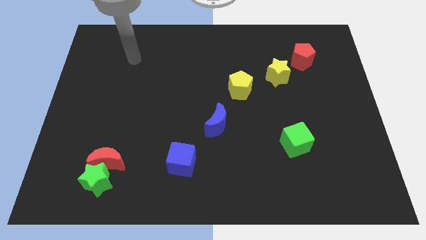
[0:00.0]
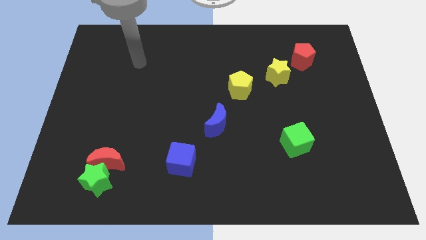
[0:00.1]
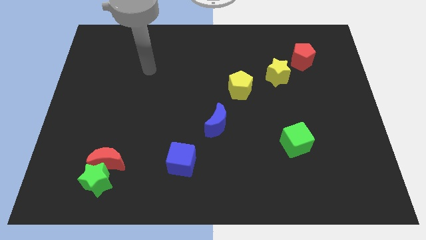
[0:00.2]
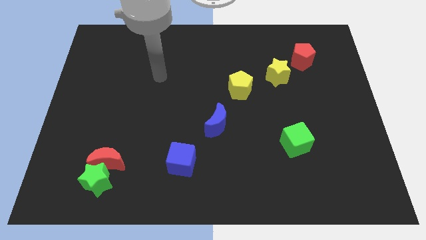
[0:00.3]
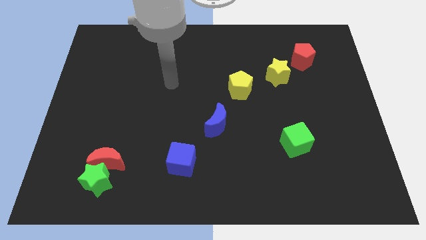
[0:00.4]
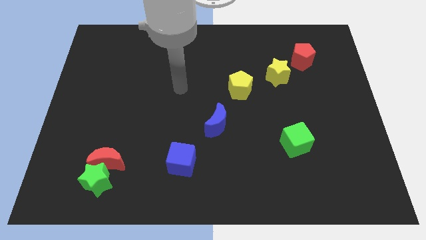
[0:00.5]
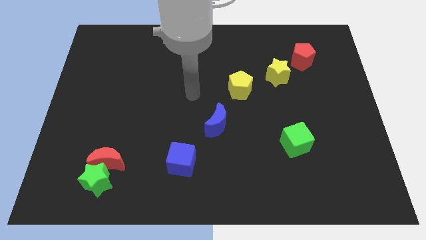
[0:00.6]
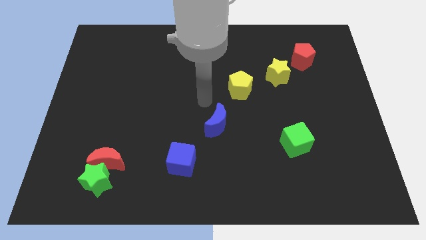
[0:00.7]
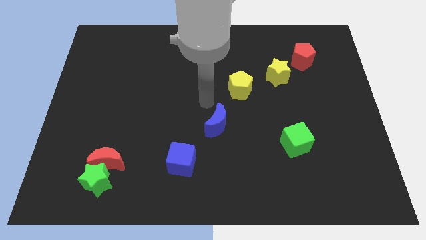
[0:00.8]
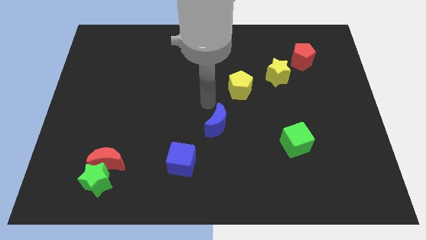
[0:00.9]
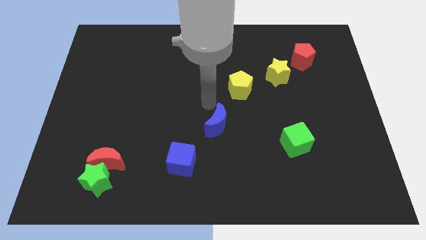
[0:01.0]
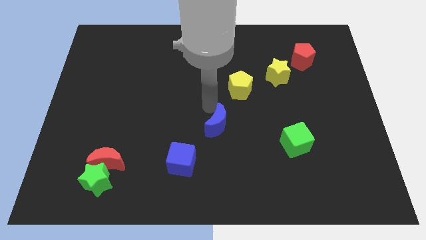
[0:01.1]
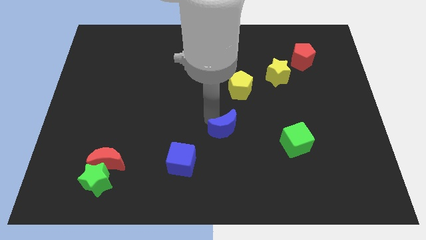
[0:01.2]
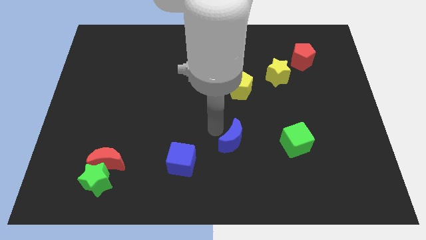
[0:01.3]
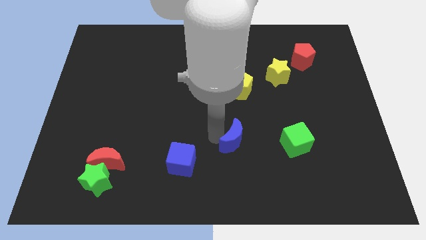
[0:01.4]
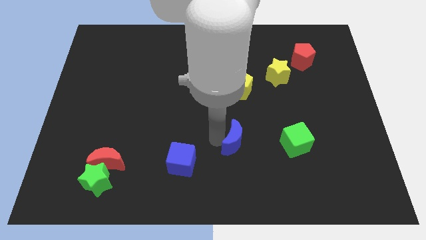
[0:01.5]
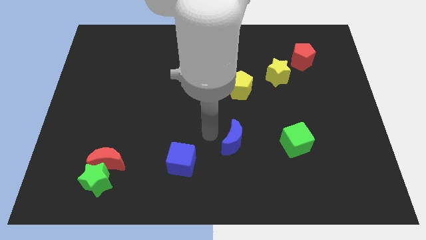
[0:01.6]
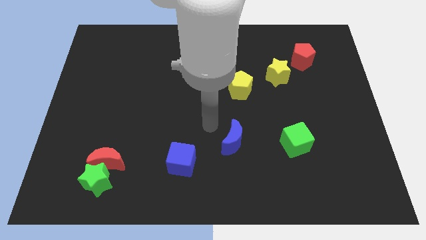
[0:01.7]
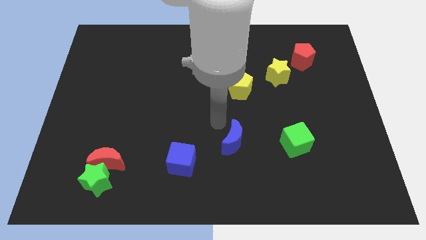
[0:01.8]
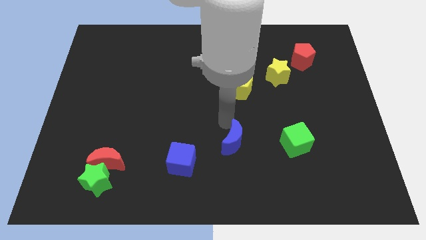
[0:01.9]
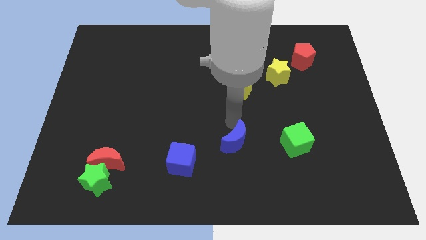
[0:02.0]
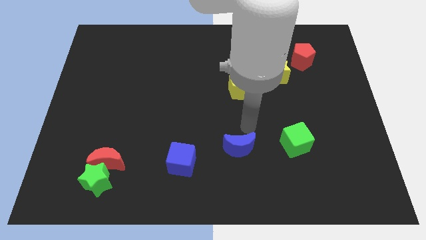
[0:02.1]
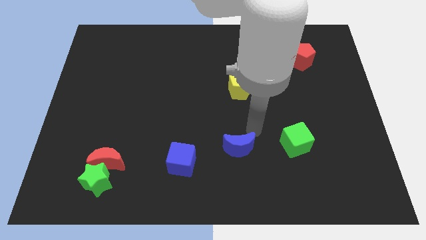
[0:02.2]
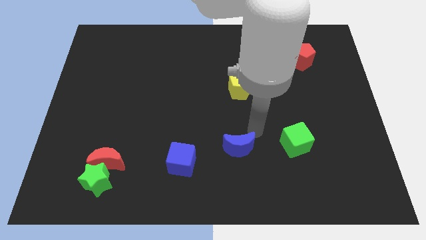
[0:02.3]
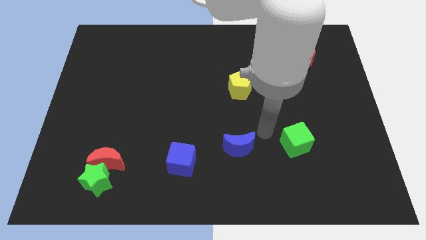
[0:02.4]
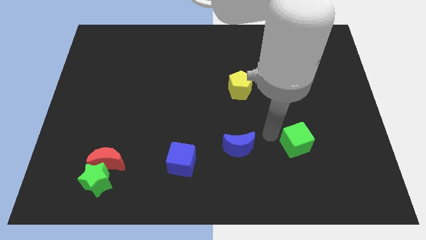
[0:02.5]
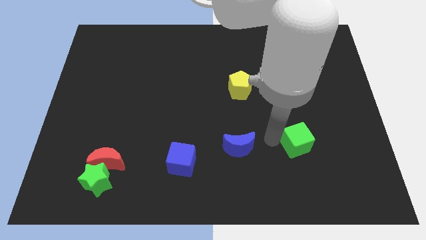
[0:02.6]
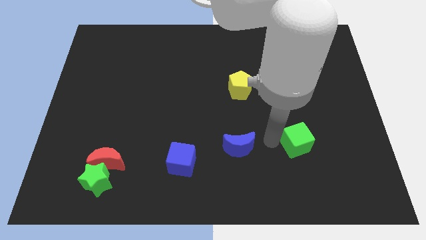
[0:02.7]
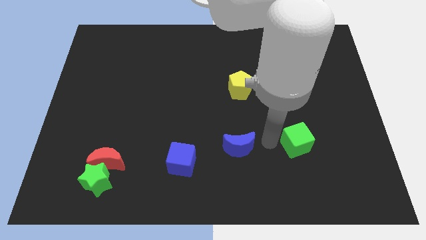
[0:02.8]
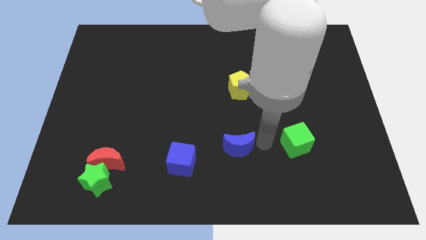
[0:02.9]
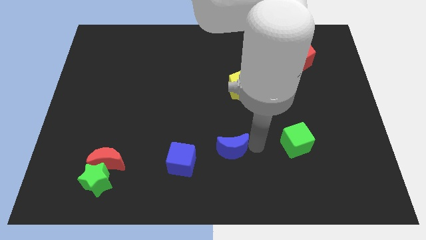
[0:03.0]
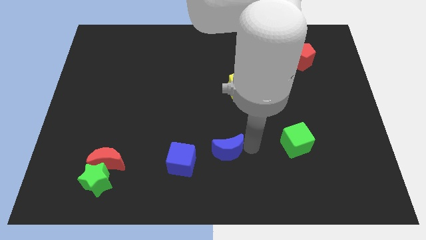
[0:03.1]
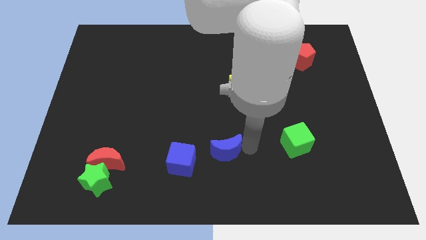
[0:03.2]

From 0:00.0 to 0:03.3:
slightly touch left to the green cube

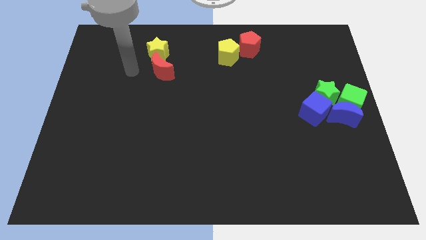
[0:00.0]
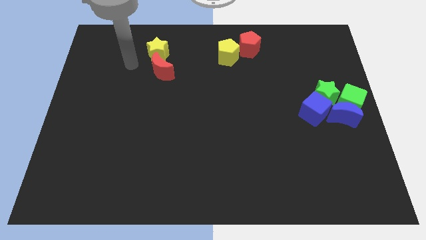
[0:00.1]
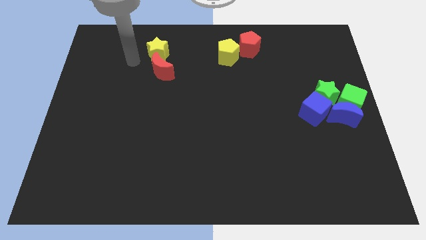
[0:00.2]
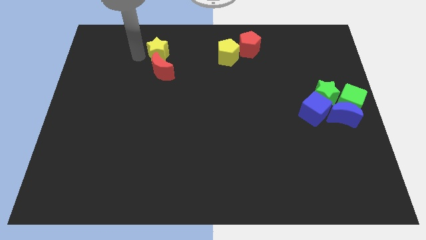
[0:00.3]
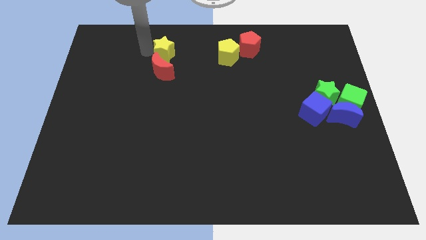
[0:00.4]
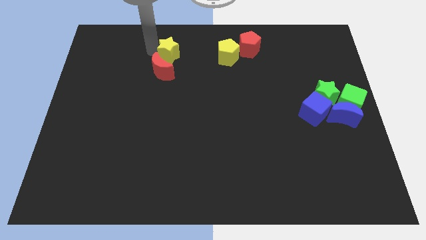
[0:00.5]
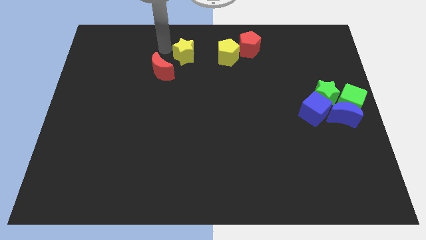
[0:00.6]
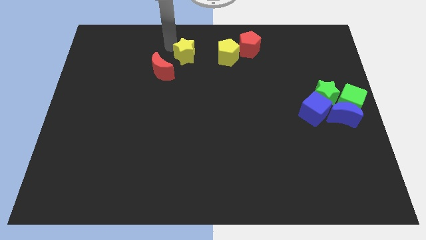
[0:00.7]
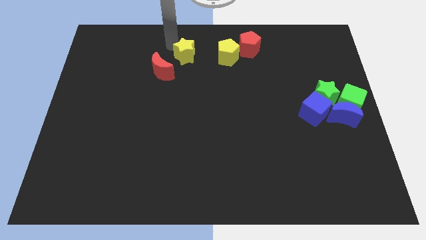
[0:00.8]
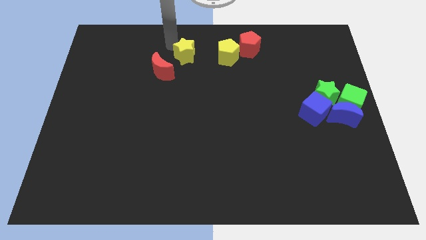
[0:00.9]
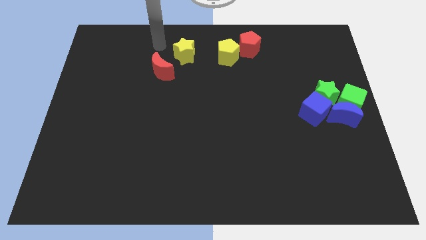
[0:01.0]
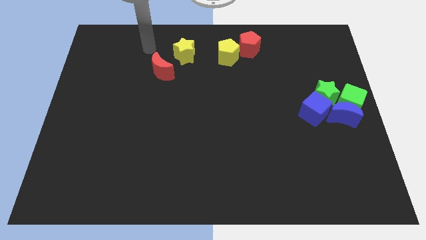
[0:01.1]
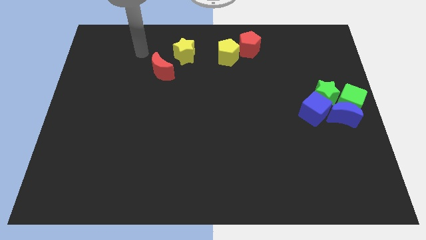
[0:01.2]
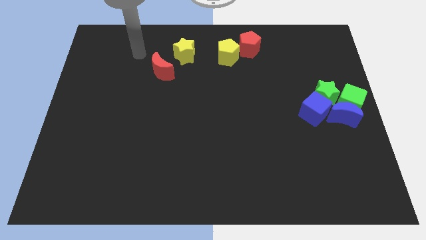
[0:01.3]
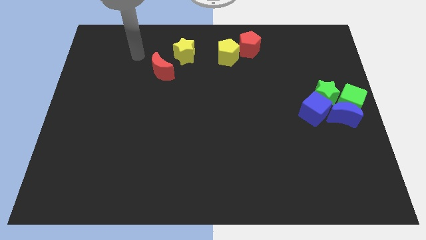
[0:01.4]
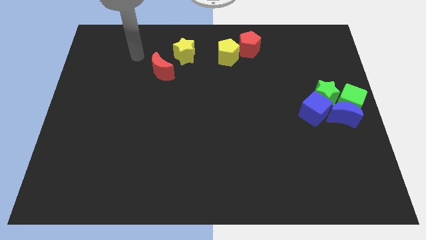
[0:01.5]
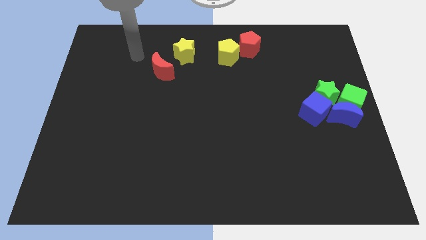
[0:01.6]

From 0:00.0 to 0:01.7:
push the yellow star towards the yellow pentagon

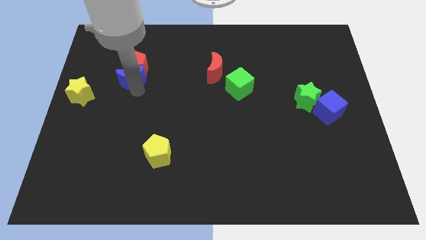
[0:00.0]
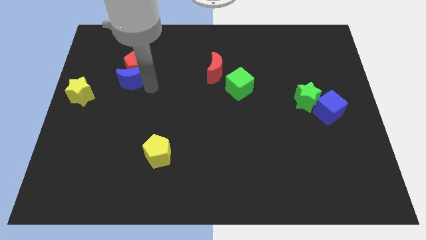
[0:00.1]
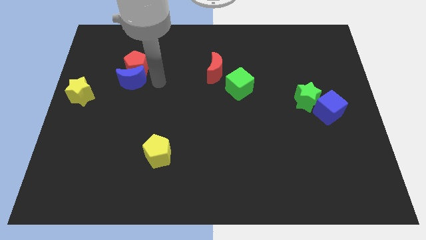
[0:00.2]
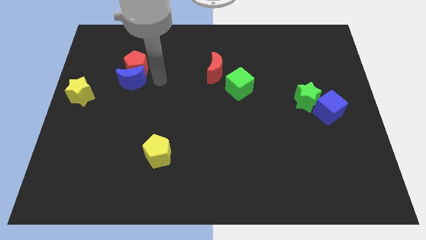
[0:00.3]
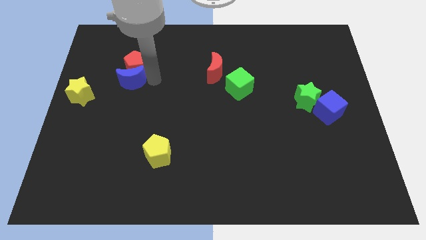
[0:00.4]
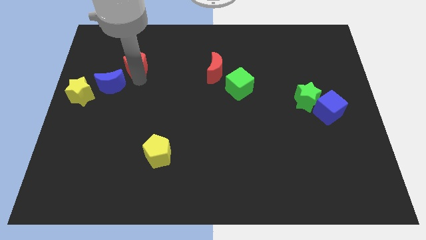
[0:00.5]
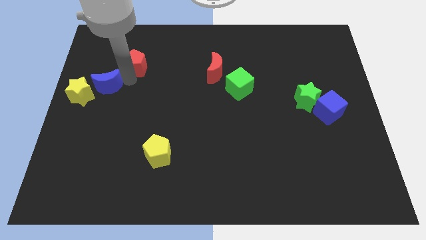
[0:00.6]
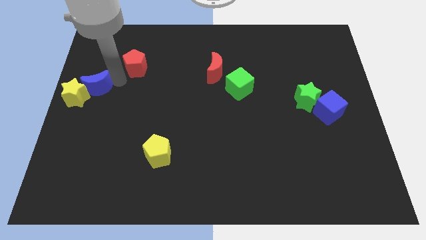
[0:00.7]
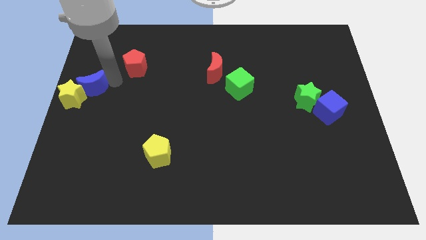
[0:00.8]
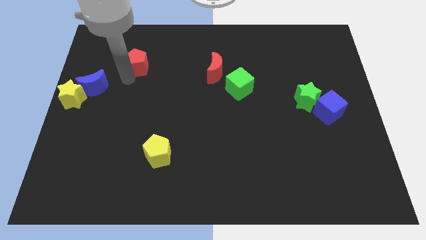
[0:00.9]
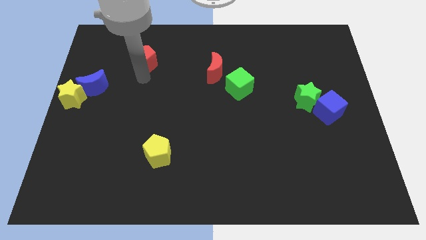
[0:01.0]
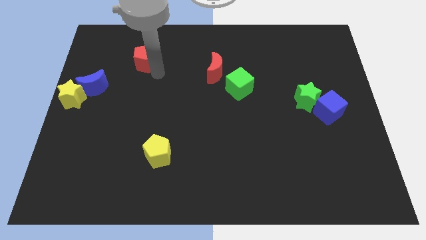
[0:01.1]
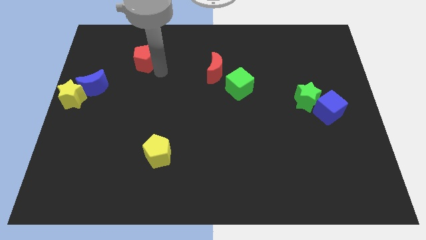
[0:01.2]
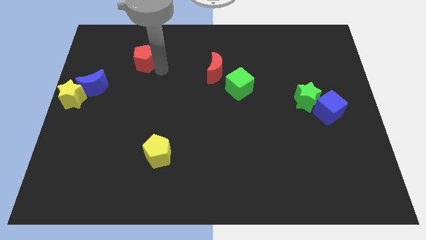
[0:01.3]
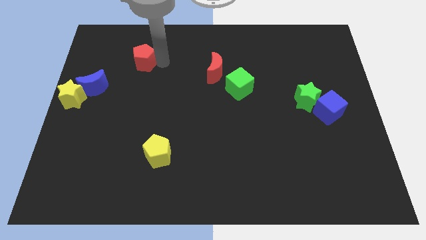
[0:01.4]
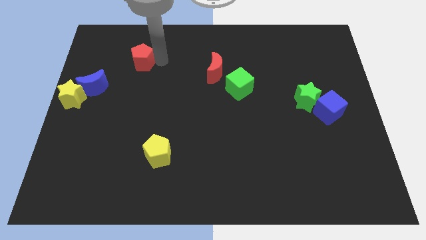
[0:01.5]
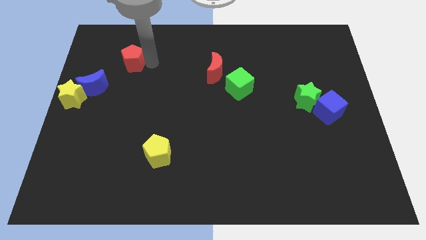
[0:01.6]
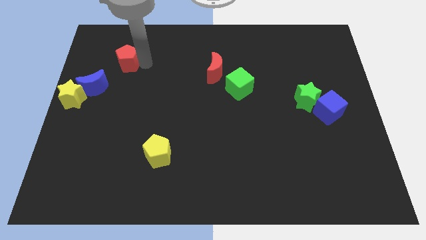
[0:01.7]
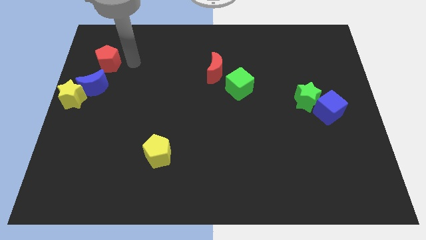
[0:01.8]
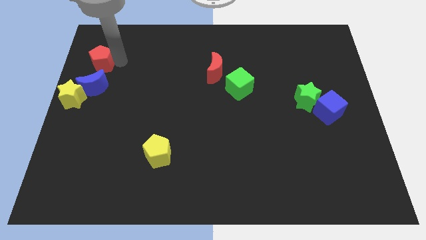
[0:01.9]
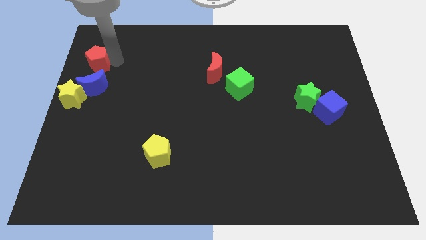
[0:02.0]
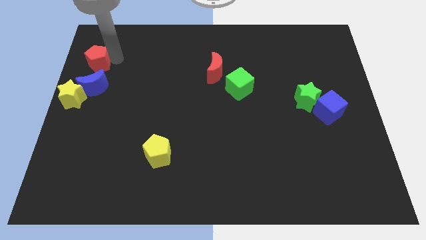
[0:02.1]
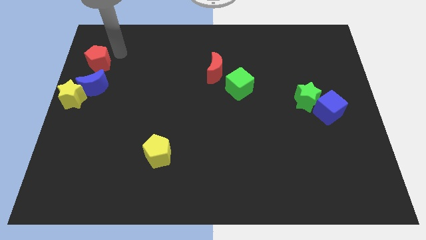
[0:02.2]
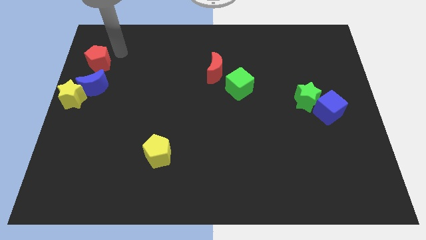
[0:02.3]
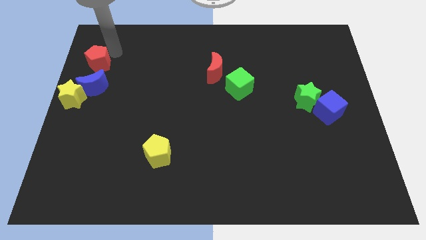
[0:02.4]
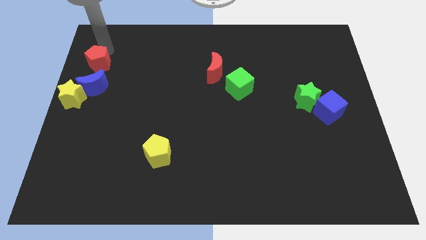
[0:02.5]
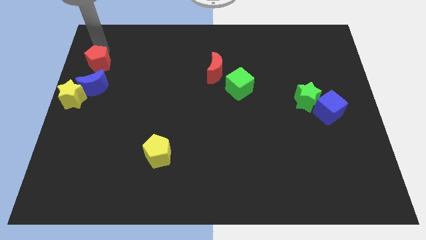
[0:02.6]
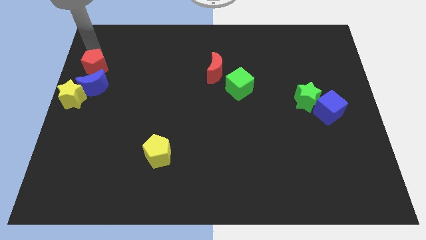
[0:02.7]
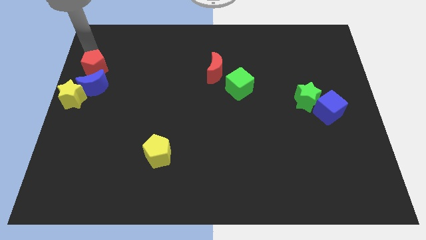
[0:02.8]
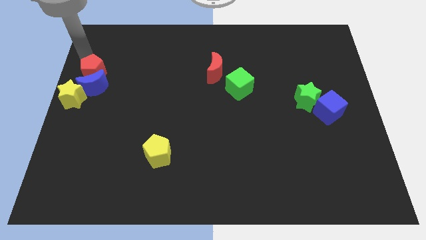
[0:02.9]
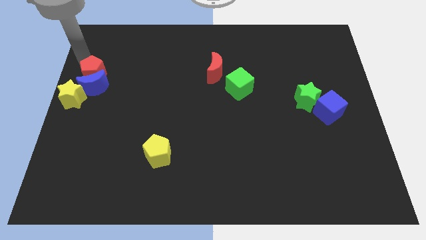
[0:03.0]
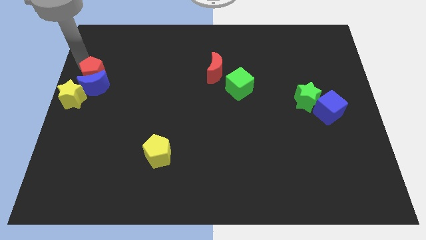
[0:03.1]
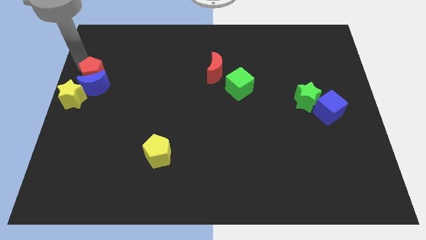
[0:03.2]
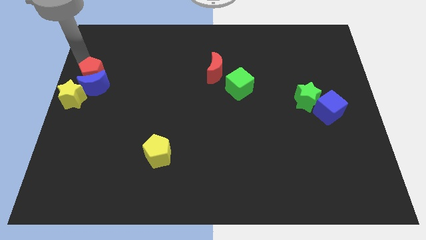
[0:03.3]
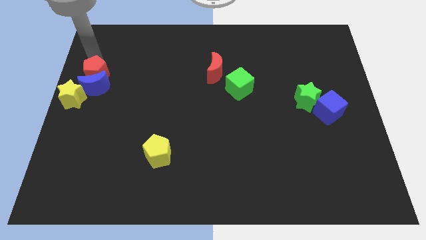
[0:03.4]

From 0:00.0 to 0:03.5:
push the blue moon and red pentagon into the yellow star

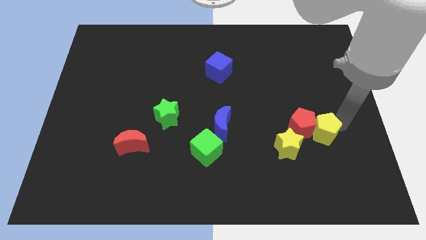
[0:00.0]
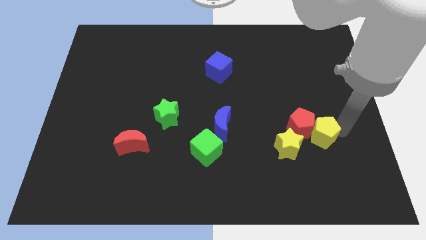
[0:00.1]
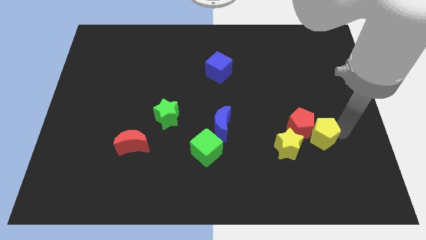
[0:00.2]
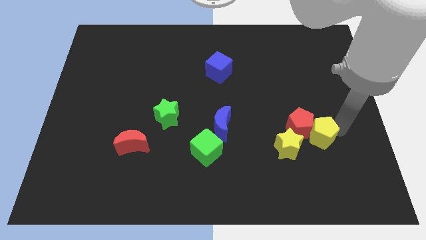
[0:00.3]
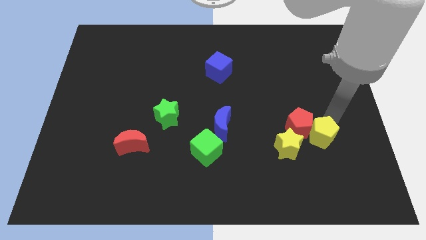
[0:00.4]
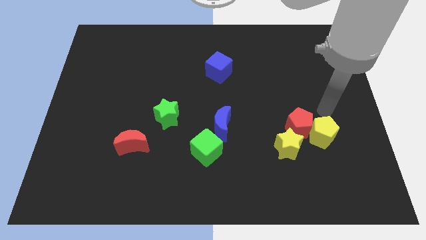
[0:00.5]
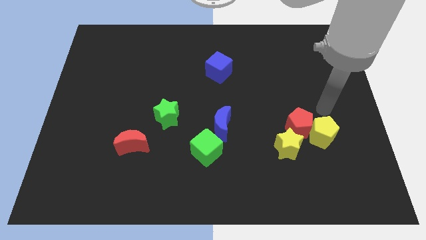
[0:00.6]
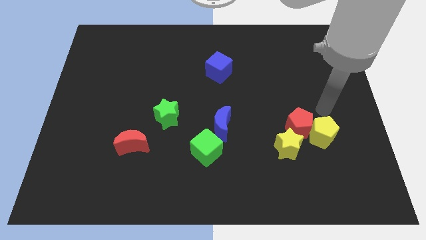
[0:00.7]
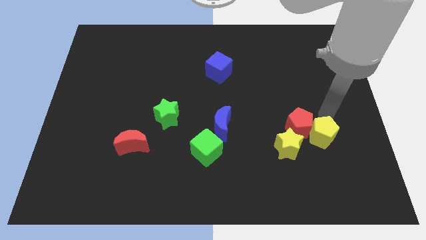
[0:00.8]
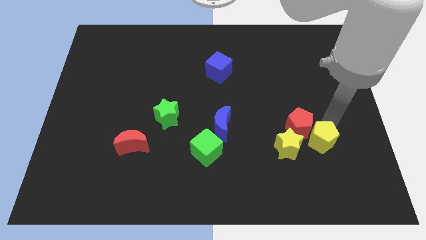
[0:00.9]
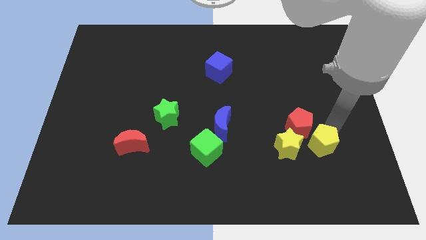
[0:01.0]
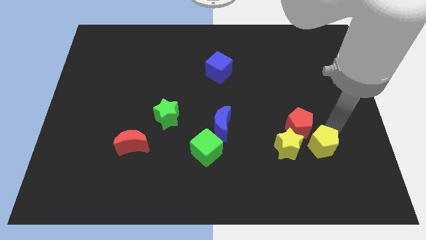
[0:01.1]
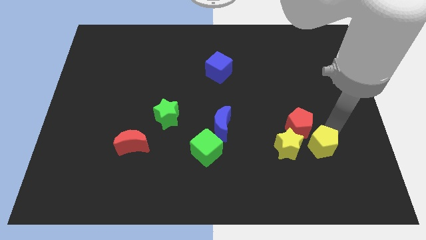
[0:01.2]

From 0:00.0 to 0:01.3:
place yellow pentagon to the right of yellow star
